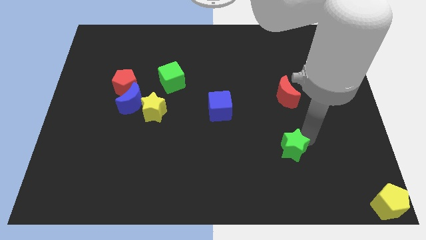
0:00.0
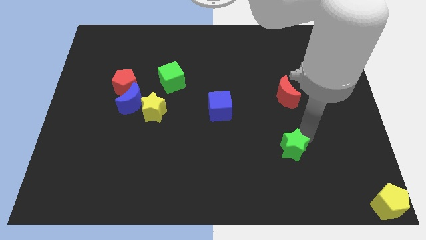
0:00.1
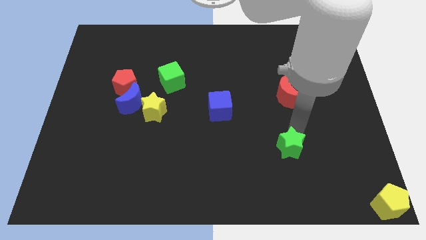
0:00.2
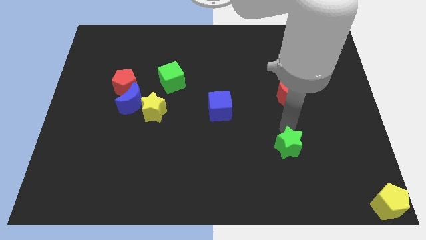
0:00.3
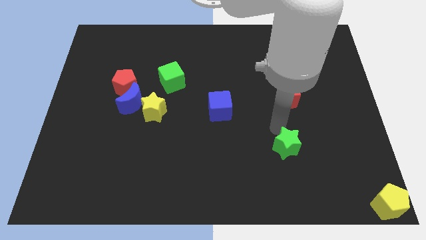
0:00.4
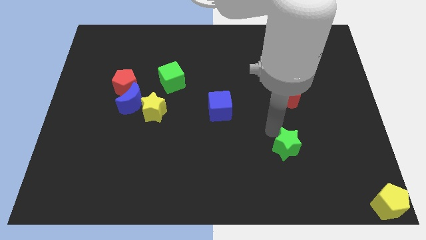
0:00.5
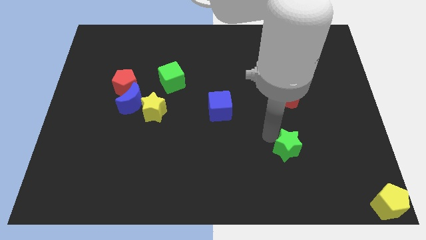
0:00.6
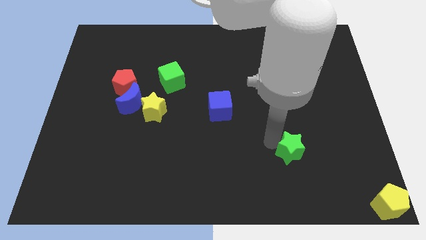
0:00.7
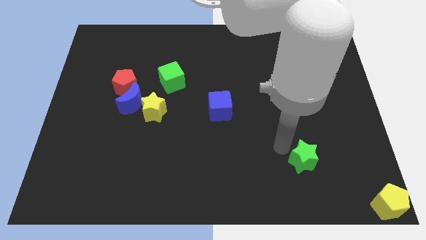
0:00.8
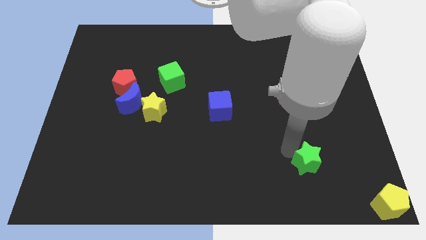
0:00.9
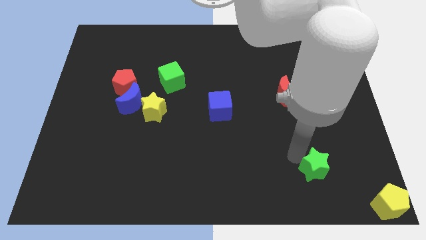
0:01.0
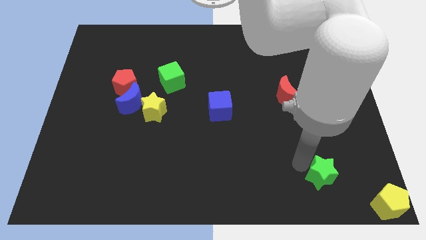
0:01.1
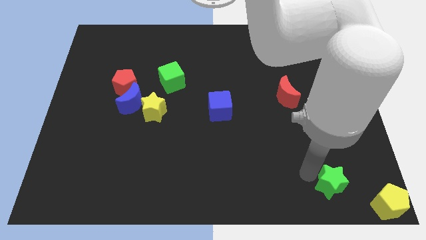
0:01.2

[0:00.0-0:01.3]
move green star to the bottom of the board

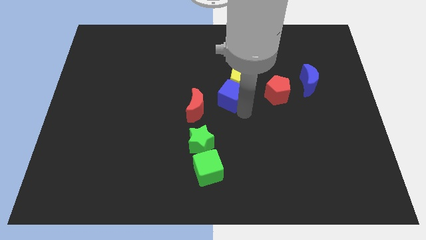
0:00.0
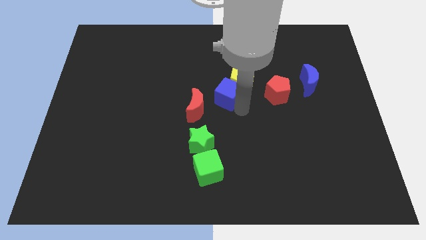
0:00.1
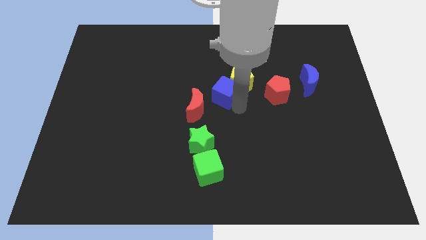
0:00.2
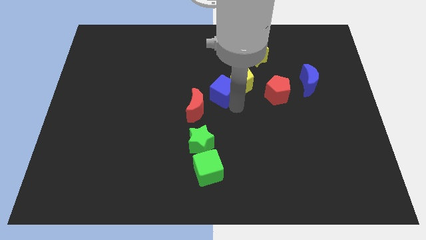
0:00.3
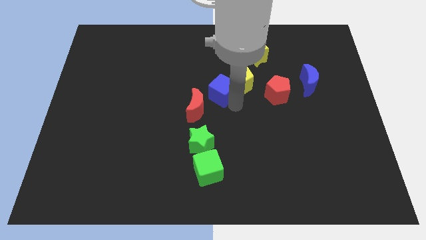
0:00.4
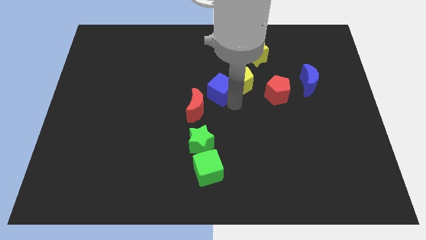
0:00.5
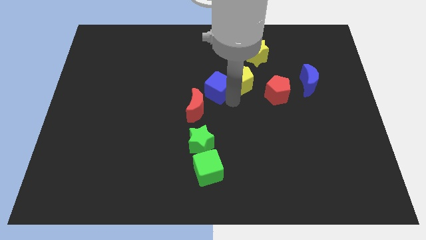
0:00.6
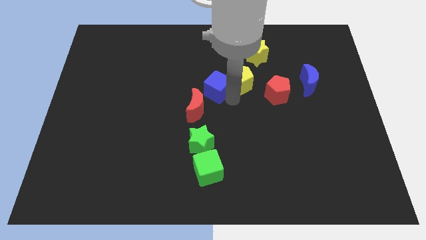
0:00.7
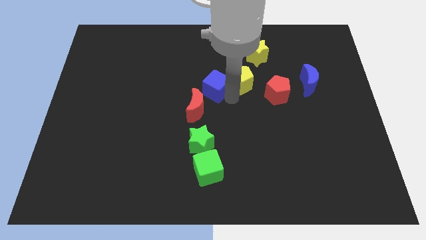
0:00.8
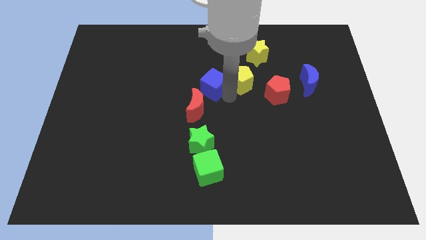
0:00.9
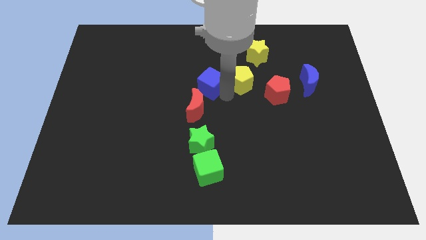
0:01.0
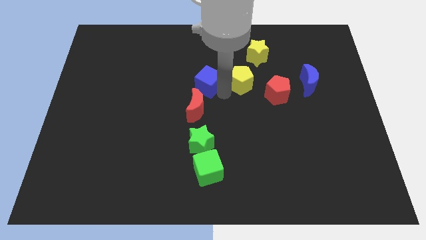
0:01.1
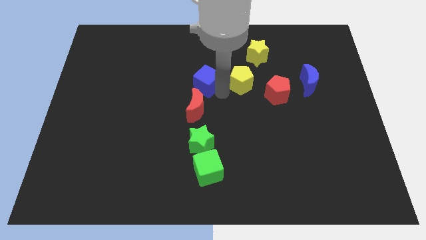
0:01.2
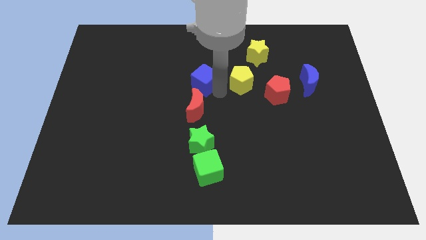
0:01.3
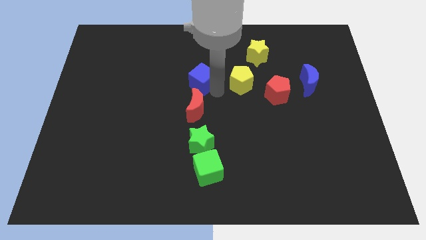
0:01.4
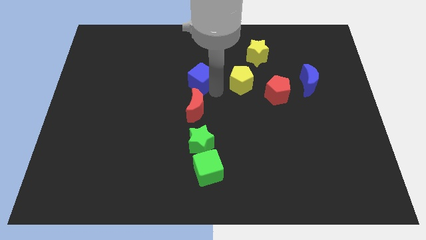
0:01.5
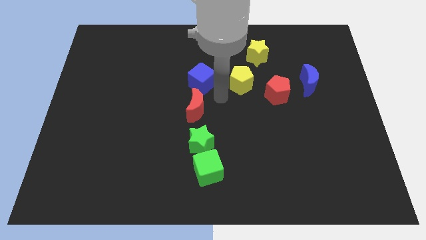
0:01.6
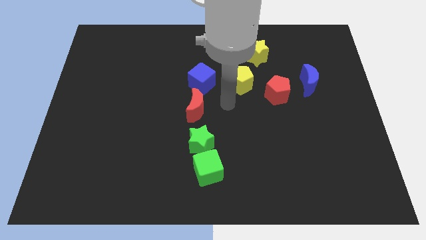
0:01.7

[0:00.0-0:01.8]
slide the blue cube to the top of the red moon

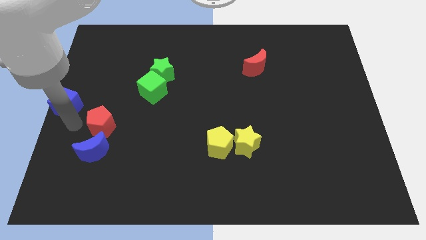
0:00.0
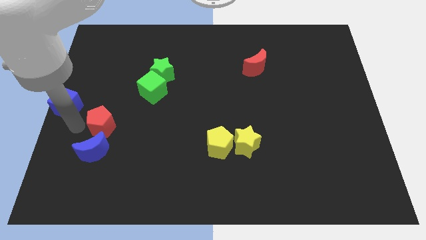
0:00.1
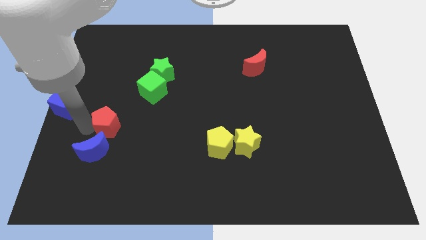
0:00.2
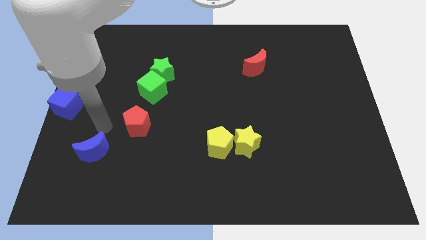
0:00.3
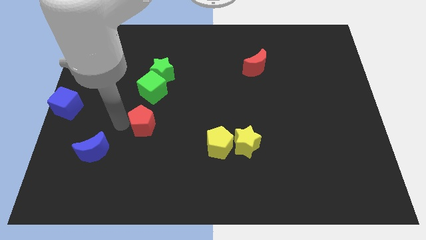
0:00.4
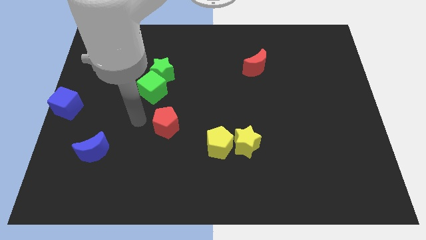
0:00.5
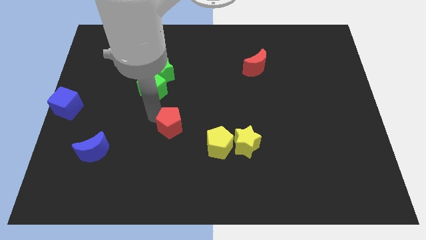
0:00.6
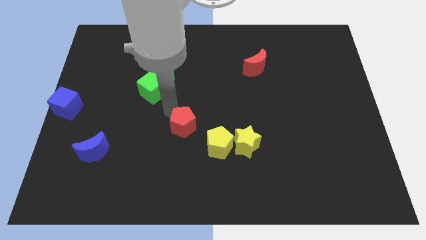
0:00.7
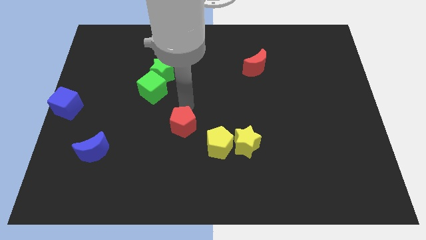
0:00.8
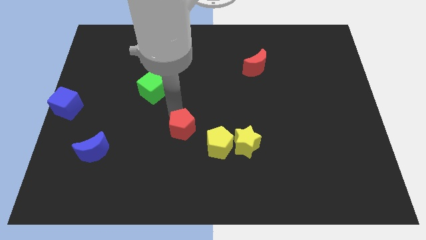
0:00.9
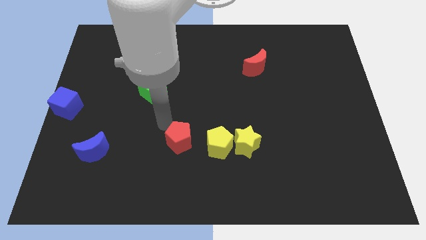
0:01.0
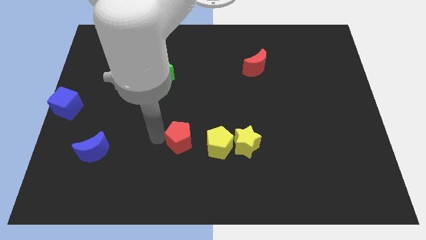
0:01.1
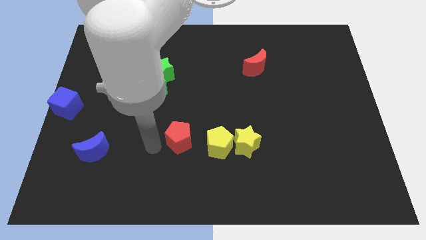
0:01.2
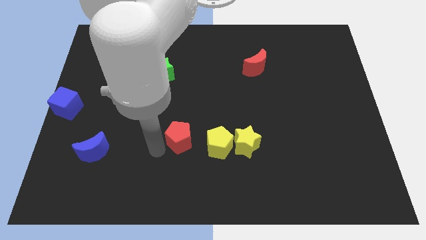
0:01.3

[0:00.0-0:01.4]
push the red pentagon to the left side of the yellow pentagon

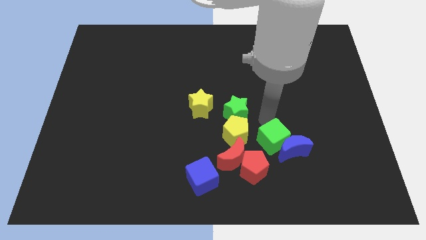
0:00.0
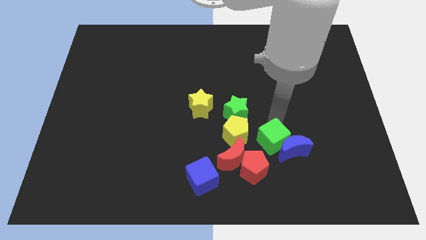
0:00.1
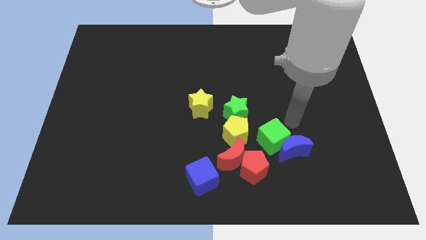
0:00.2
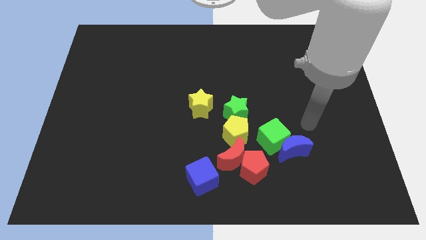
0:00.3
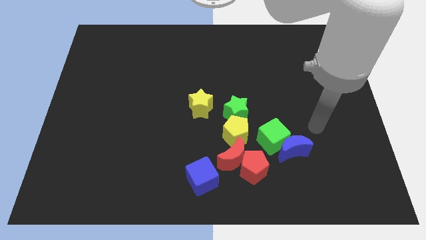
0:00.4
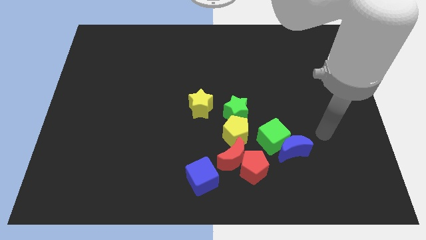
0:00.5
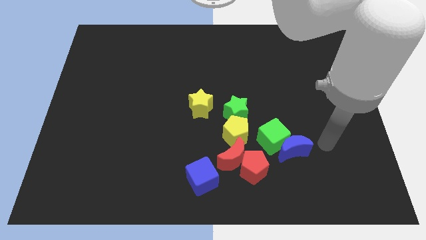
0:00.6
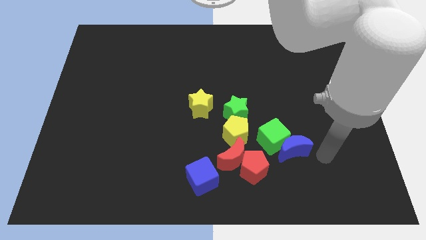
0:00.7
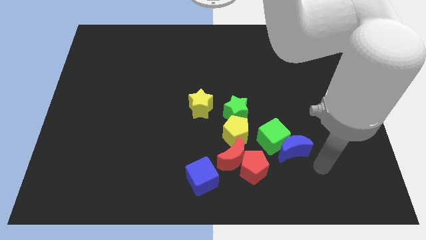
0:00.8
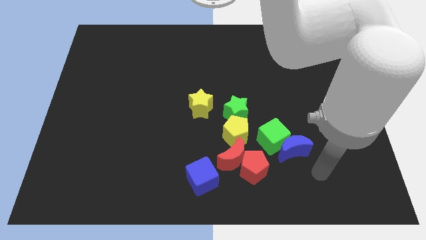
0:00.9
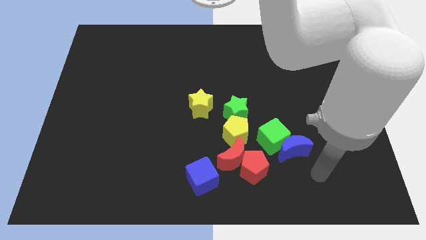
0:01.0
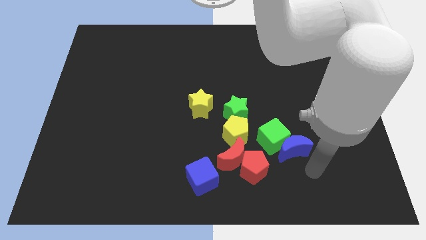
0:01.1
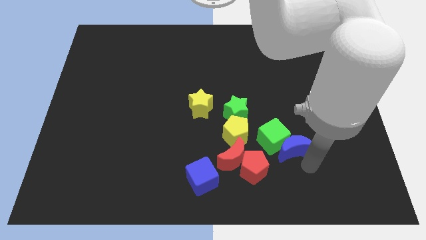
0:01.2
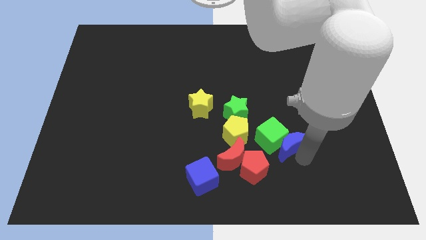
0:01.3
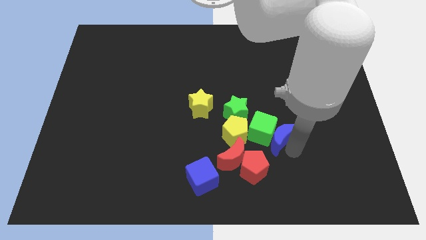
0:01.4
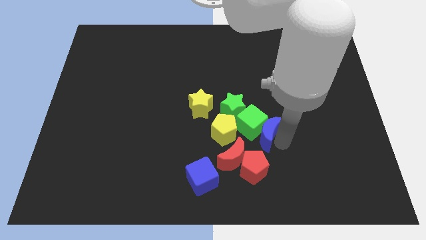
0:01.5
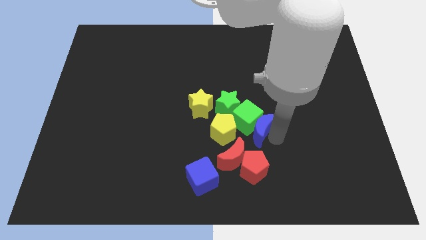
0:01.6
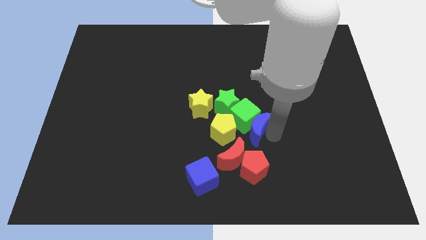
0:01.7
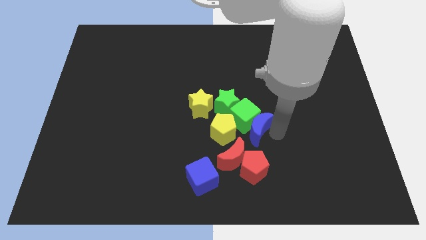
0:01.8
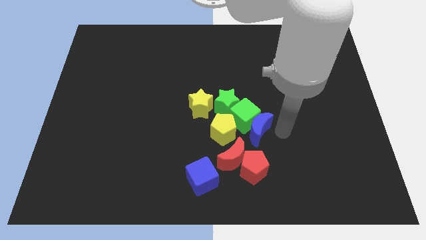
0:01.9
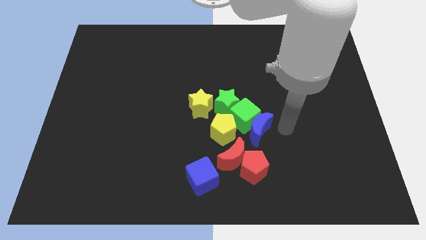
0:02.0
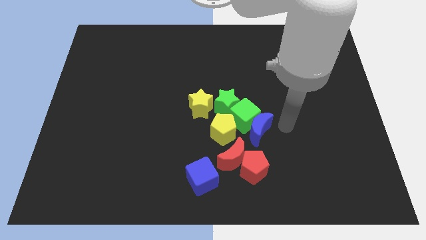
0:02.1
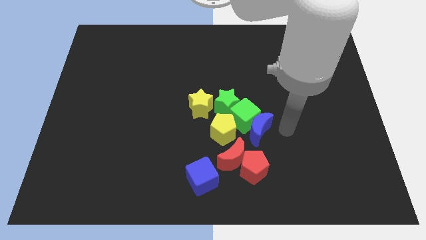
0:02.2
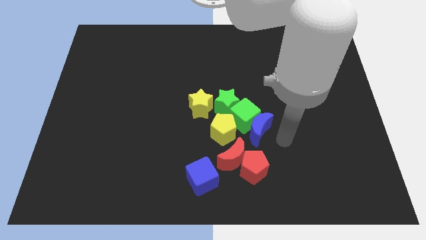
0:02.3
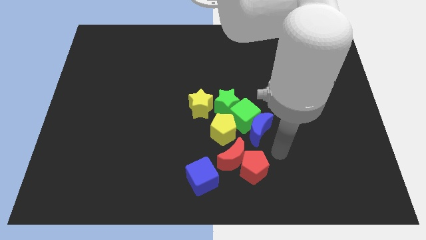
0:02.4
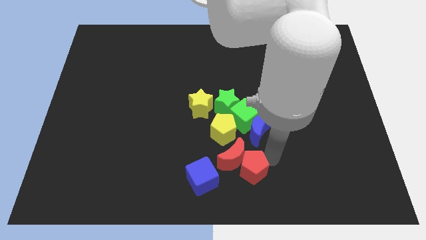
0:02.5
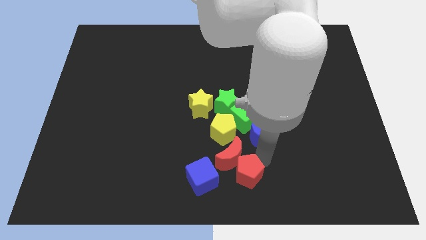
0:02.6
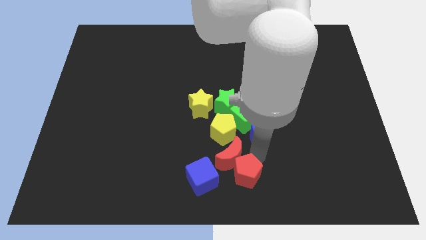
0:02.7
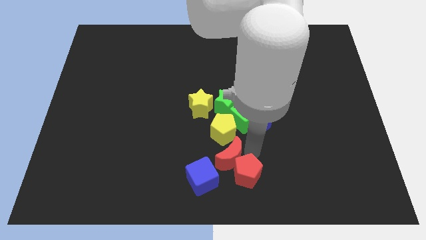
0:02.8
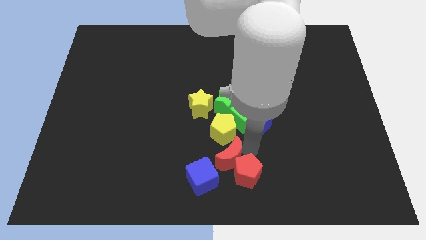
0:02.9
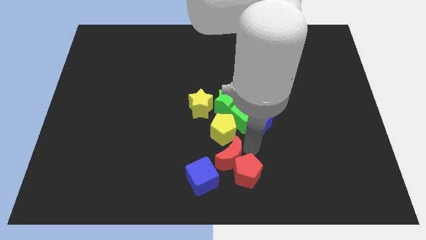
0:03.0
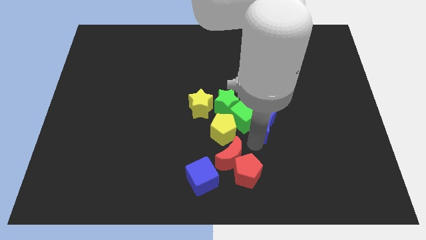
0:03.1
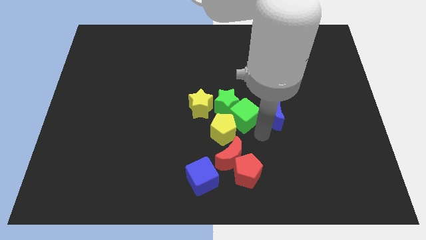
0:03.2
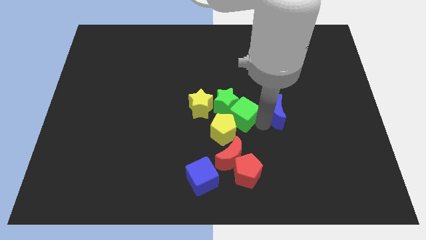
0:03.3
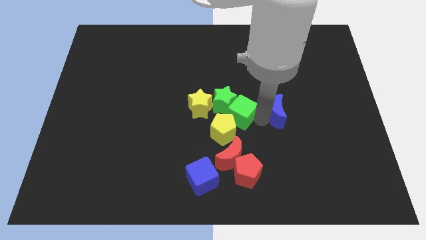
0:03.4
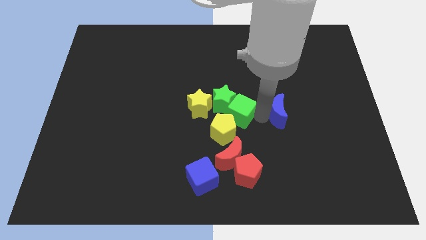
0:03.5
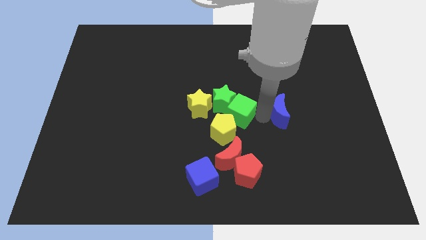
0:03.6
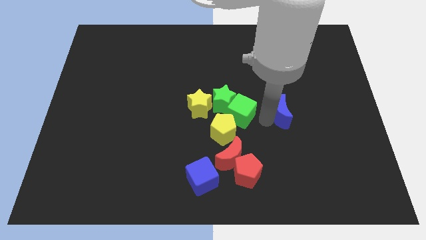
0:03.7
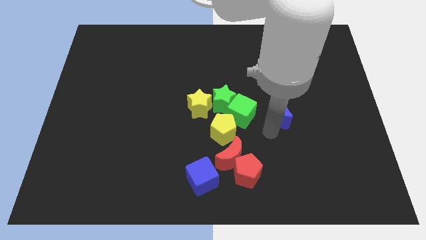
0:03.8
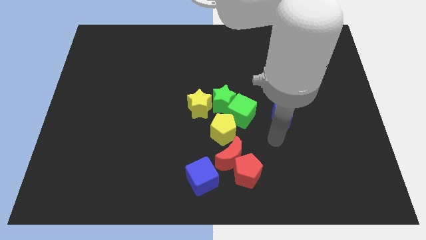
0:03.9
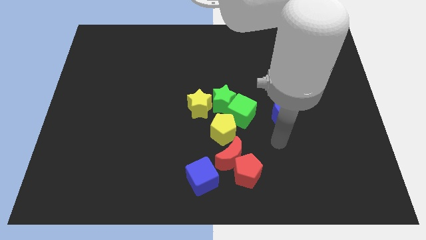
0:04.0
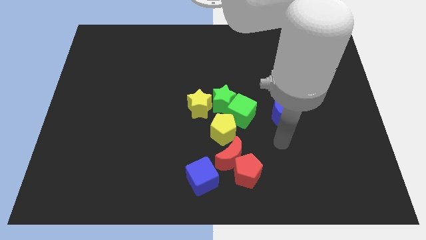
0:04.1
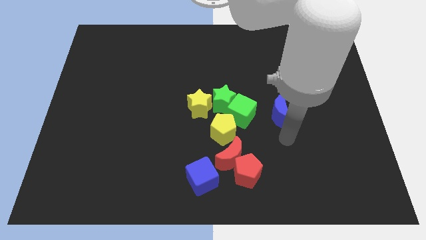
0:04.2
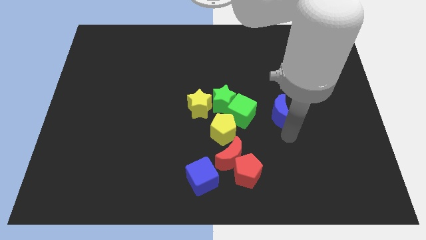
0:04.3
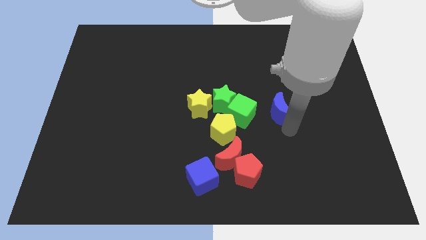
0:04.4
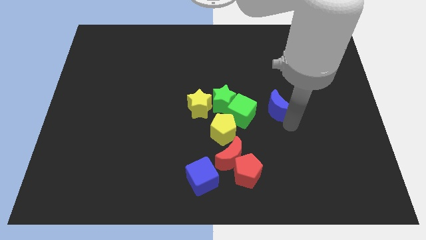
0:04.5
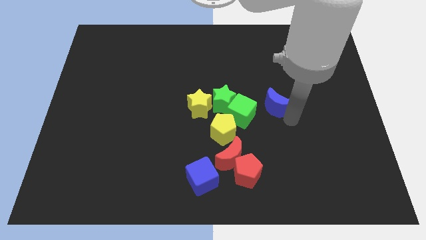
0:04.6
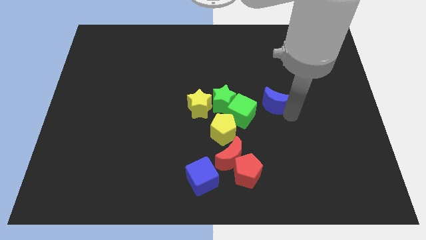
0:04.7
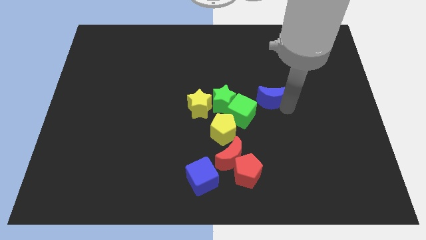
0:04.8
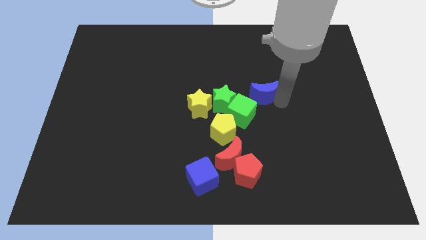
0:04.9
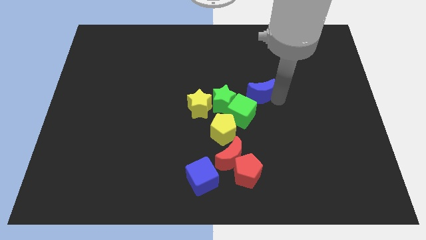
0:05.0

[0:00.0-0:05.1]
separate the blue moon from the green cube
